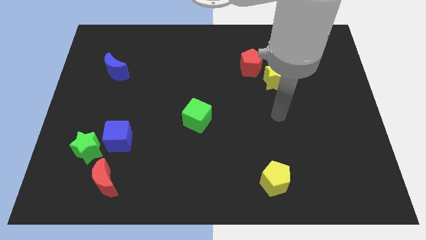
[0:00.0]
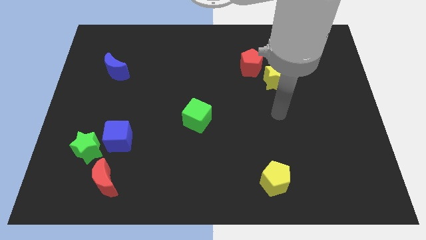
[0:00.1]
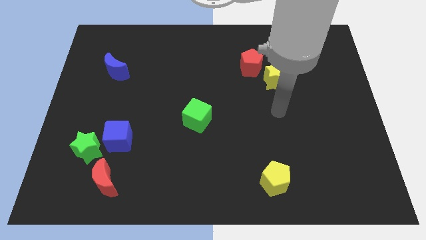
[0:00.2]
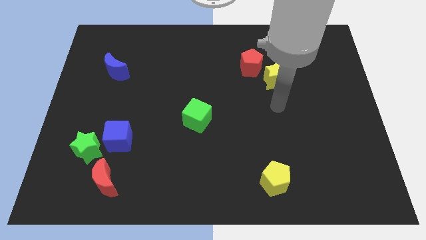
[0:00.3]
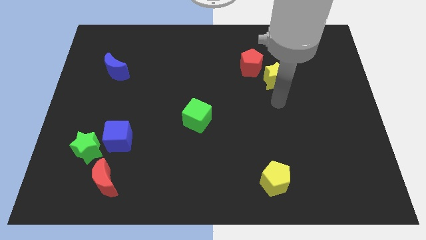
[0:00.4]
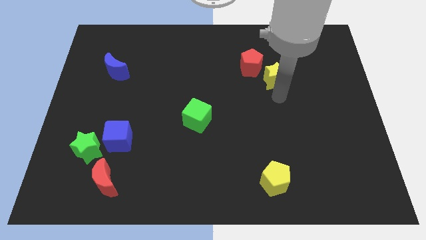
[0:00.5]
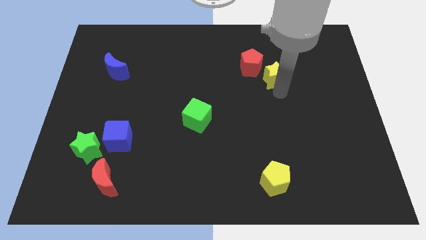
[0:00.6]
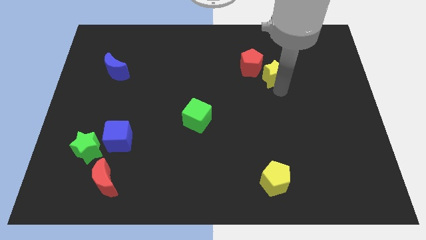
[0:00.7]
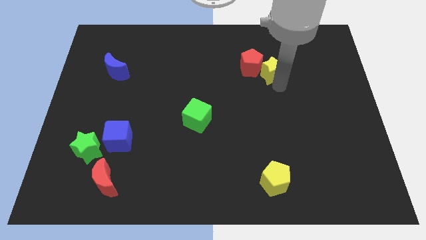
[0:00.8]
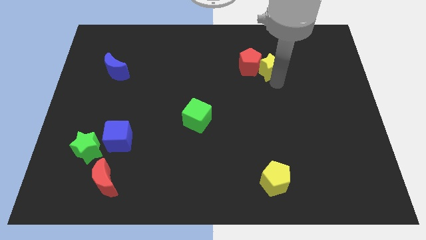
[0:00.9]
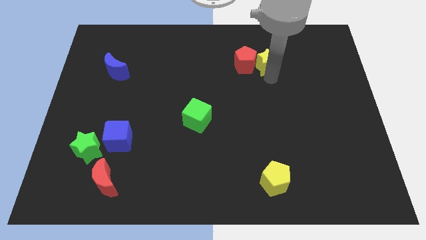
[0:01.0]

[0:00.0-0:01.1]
move the yellow star into the red penatagon

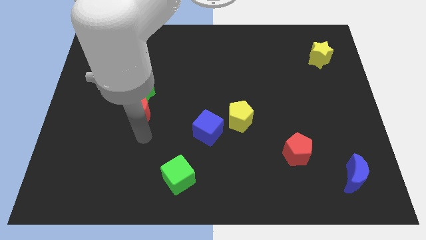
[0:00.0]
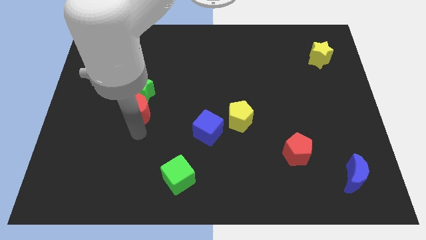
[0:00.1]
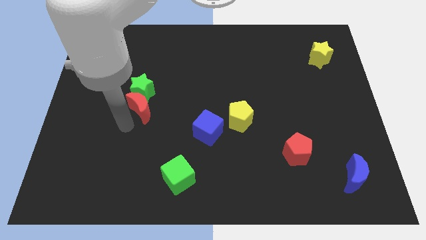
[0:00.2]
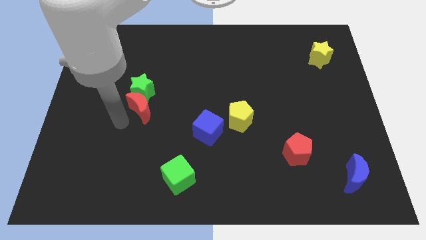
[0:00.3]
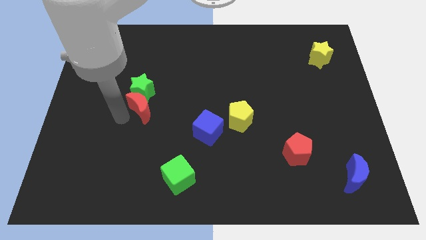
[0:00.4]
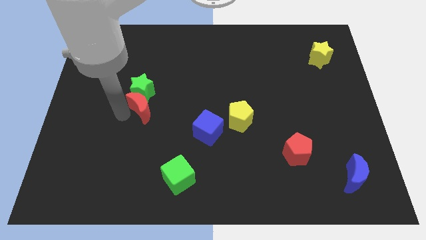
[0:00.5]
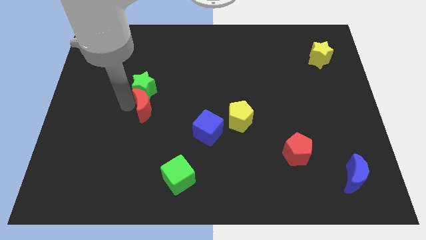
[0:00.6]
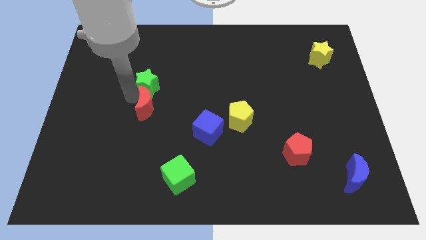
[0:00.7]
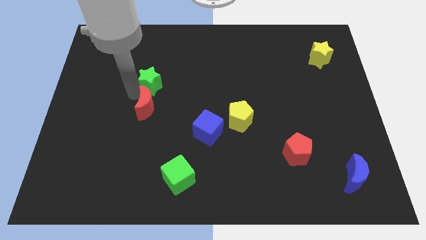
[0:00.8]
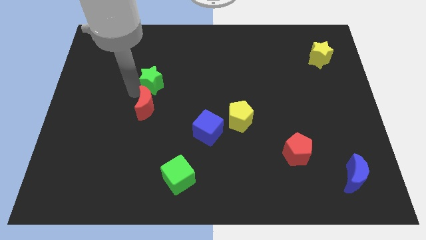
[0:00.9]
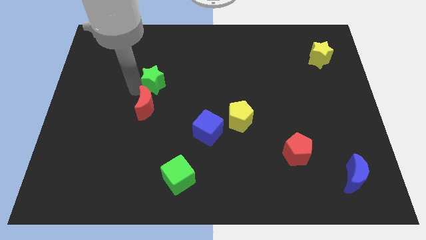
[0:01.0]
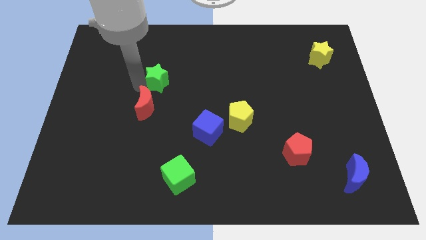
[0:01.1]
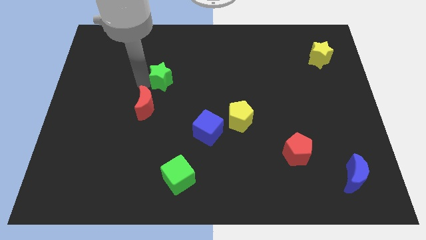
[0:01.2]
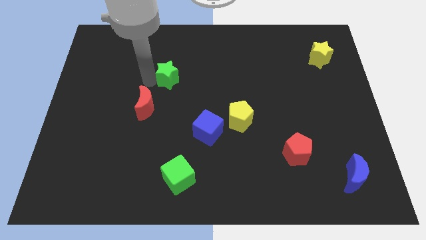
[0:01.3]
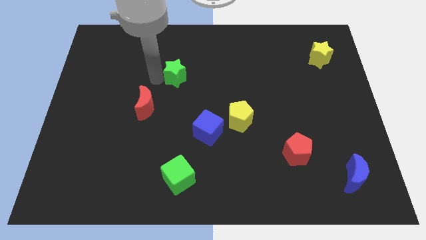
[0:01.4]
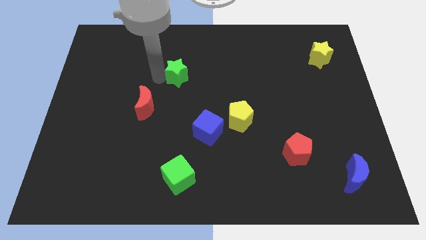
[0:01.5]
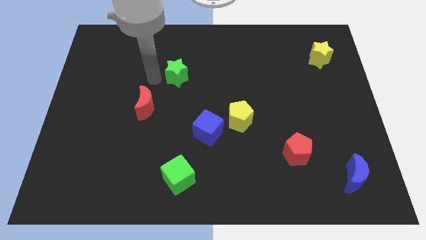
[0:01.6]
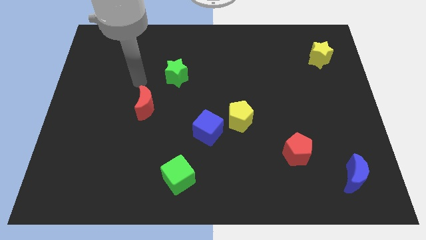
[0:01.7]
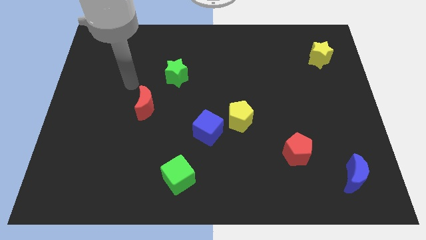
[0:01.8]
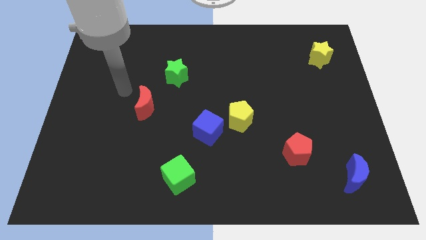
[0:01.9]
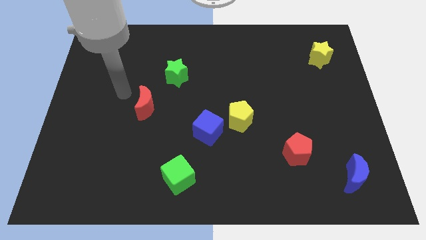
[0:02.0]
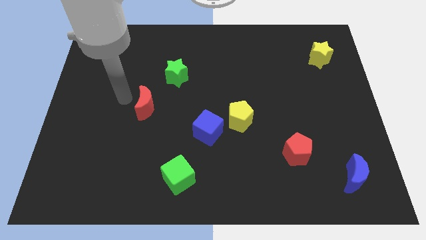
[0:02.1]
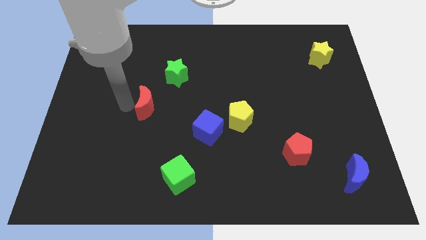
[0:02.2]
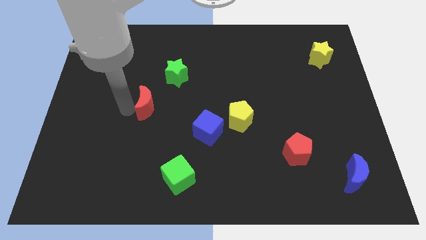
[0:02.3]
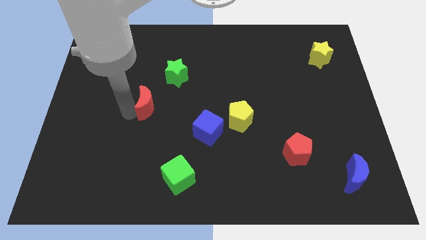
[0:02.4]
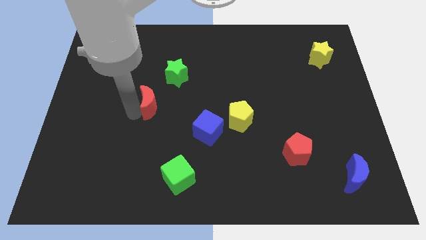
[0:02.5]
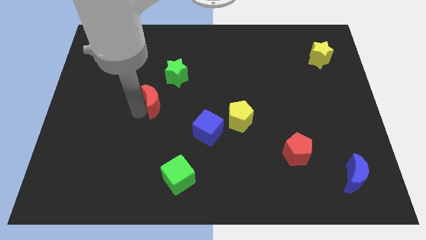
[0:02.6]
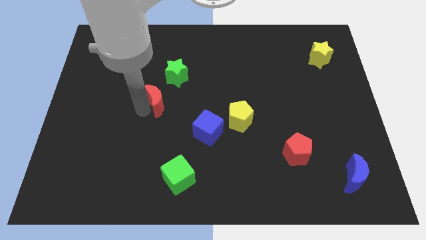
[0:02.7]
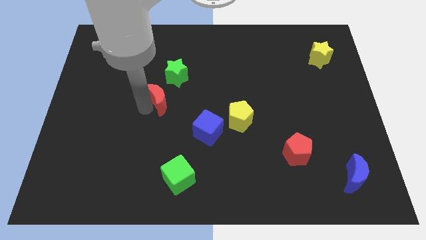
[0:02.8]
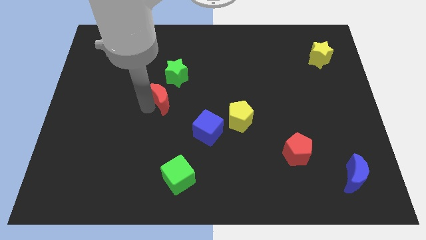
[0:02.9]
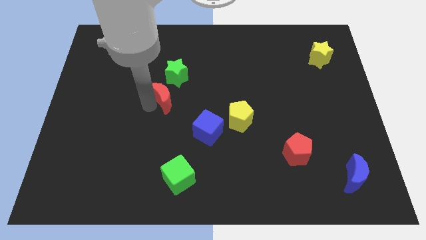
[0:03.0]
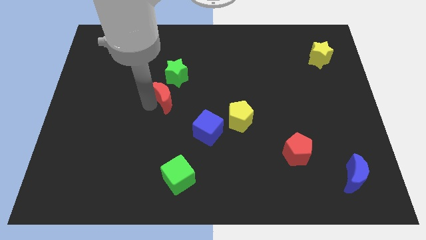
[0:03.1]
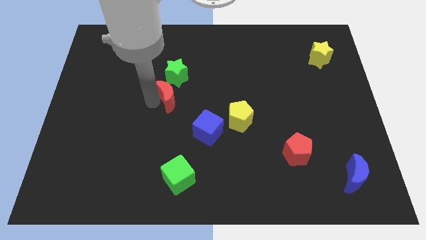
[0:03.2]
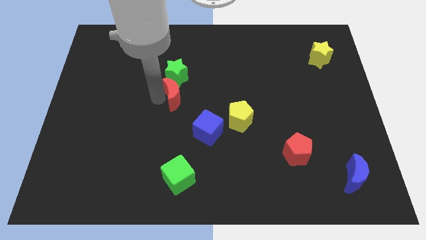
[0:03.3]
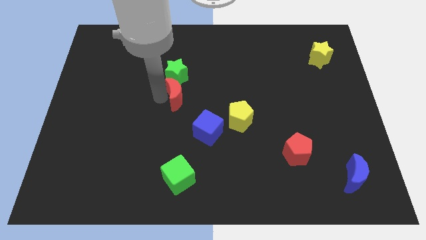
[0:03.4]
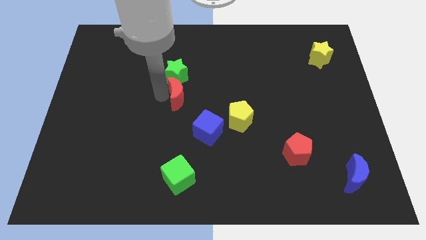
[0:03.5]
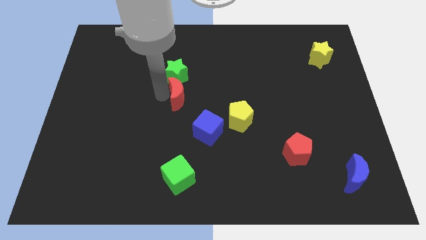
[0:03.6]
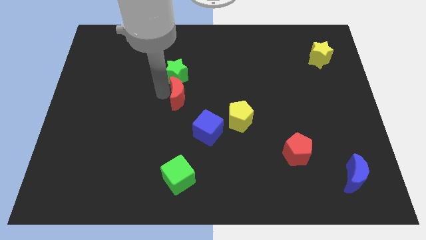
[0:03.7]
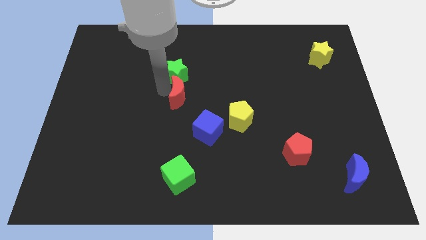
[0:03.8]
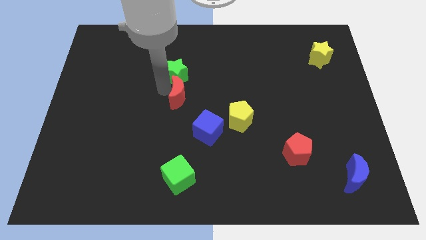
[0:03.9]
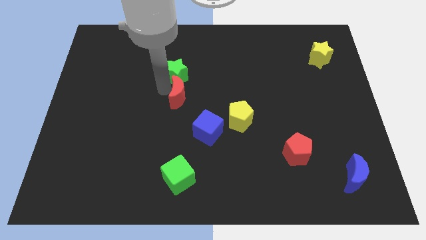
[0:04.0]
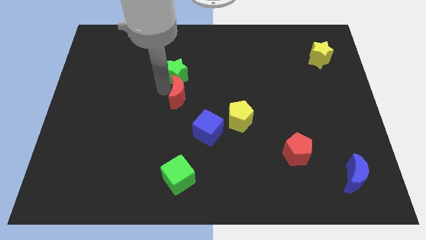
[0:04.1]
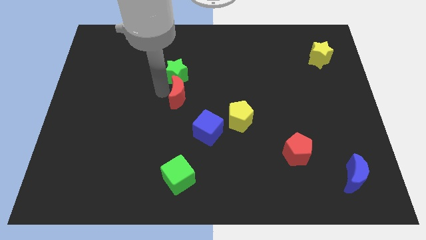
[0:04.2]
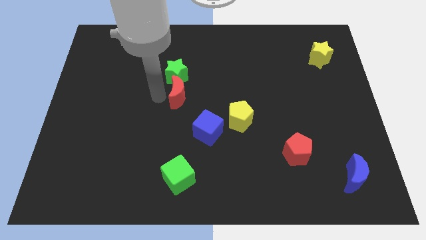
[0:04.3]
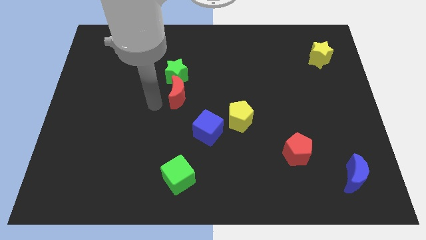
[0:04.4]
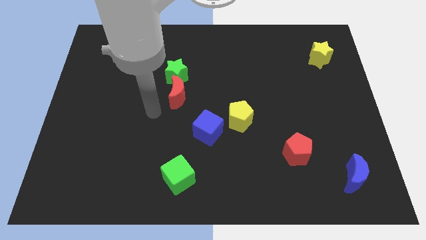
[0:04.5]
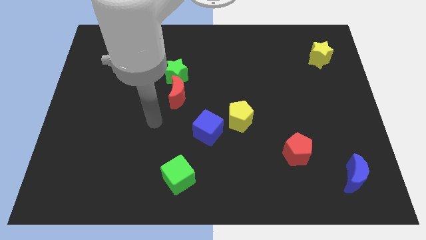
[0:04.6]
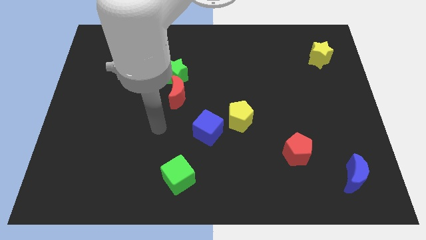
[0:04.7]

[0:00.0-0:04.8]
push the red crescent into the green star

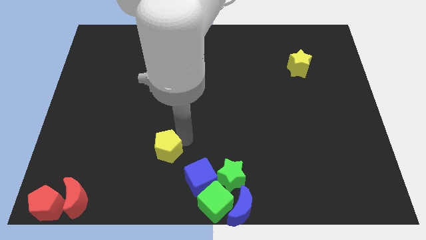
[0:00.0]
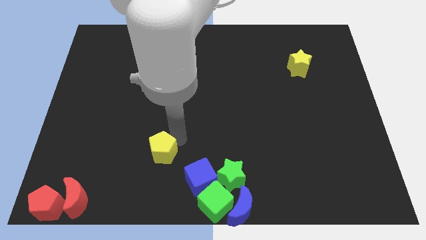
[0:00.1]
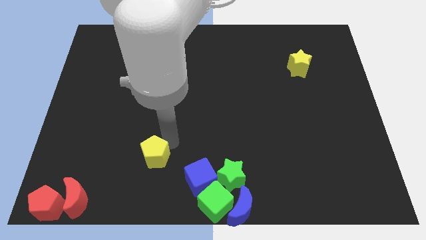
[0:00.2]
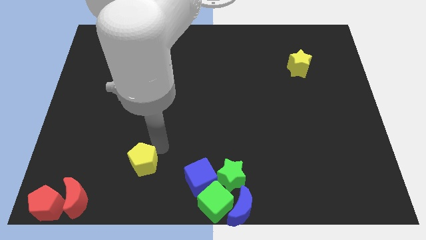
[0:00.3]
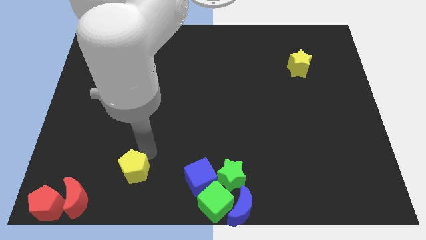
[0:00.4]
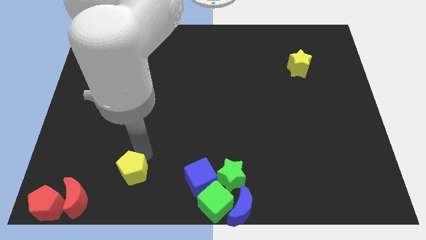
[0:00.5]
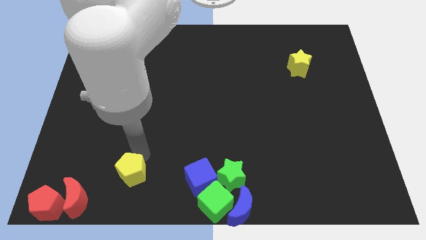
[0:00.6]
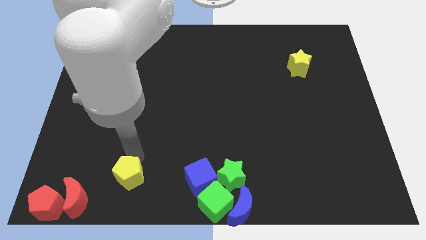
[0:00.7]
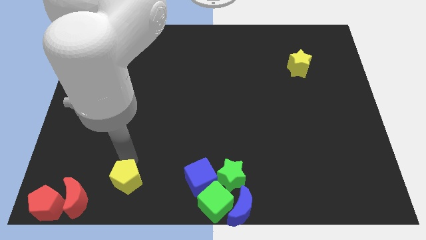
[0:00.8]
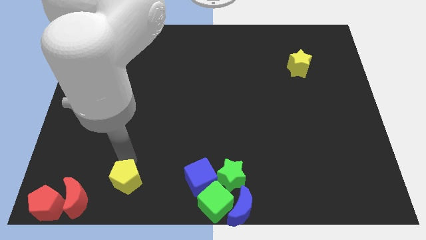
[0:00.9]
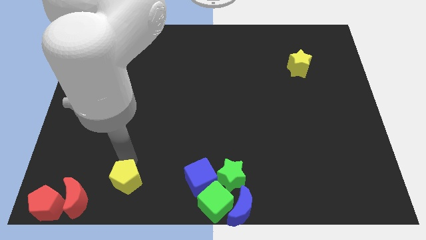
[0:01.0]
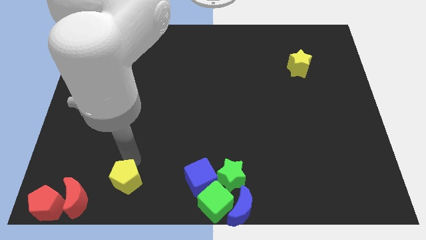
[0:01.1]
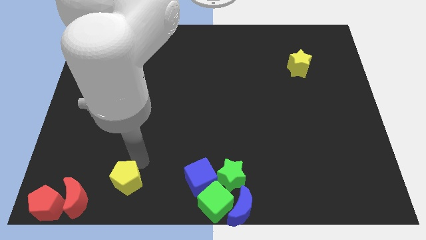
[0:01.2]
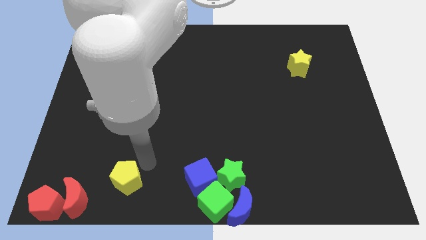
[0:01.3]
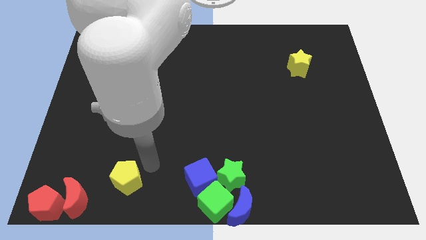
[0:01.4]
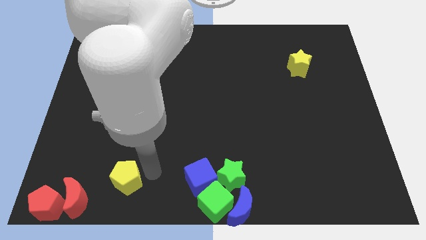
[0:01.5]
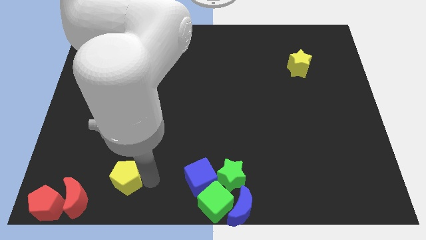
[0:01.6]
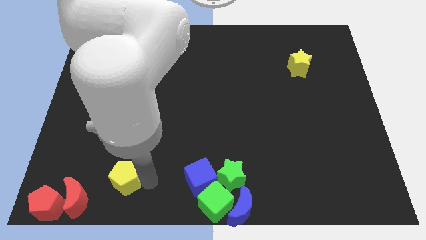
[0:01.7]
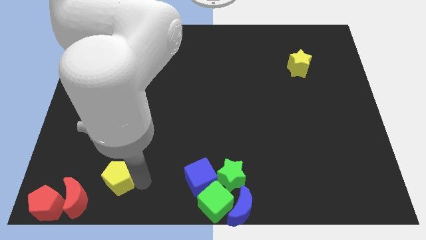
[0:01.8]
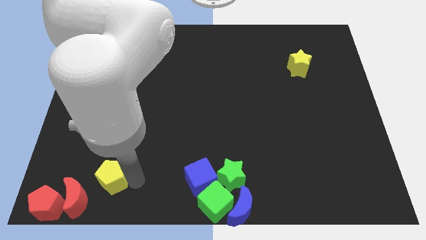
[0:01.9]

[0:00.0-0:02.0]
push the yellow pentagon slightly towards the red crescent

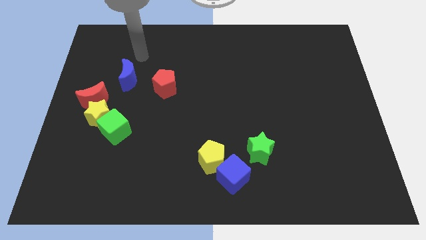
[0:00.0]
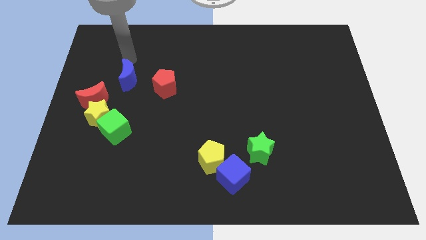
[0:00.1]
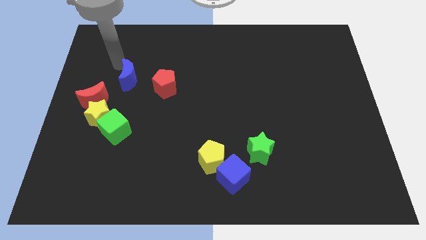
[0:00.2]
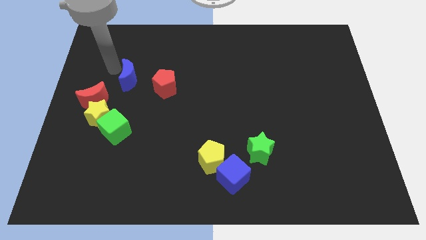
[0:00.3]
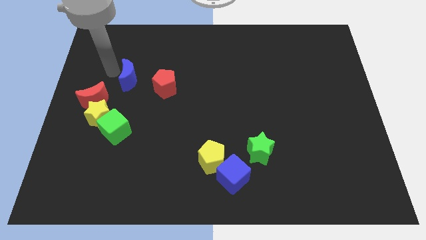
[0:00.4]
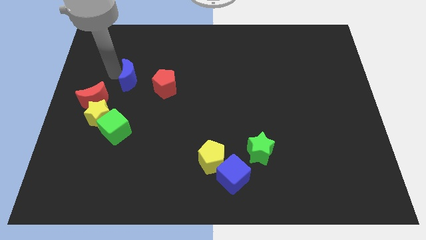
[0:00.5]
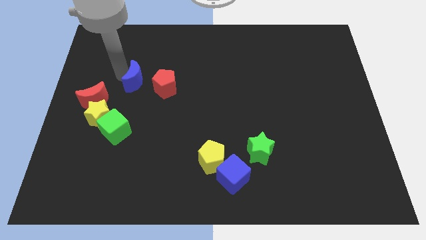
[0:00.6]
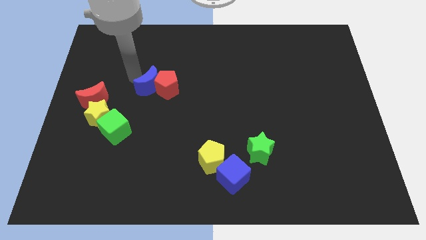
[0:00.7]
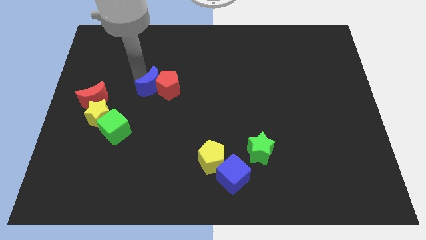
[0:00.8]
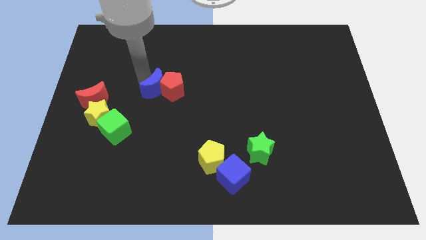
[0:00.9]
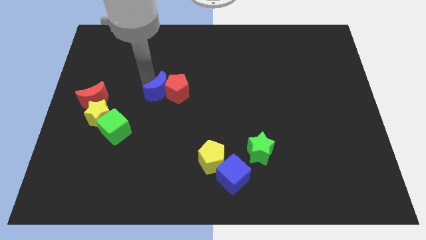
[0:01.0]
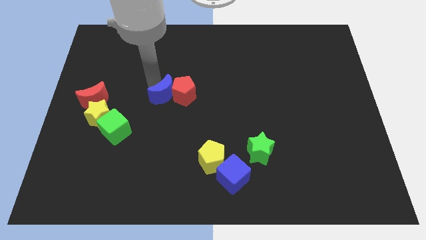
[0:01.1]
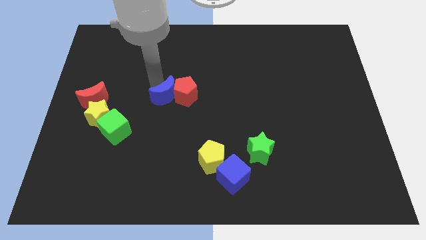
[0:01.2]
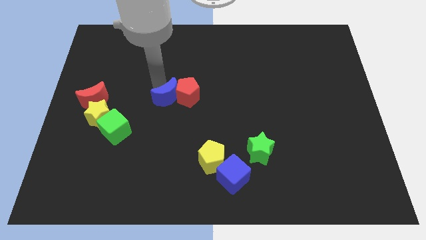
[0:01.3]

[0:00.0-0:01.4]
move the blue moon into the red pentagon
